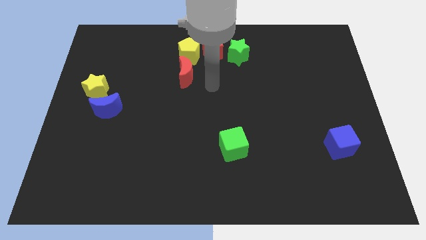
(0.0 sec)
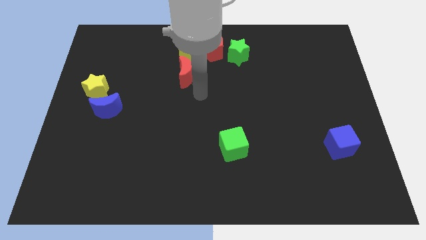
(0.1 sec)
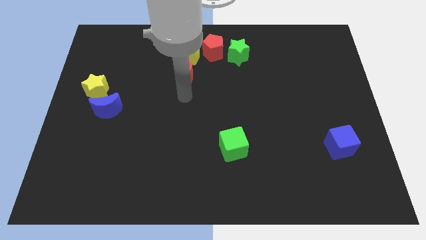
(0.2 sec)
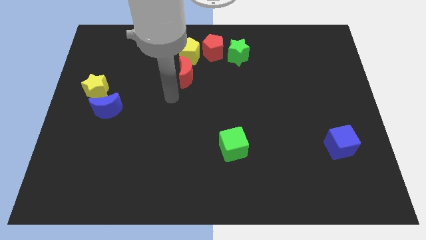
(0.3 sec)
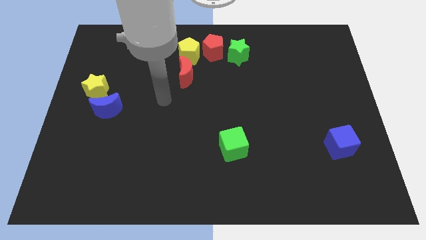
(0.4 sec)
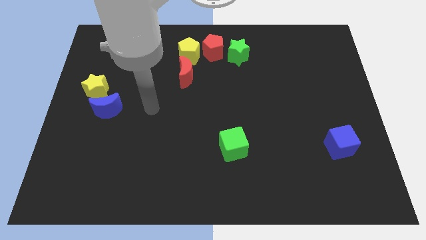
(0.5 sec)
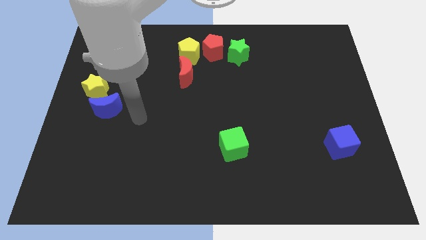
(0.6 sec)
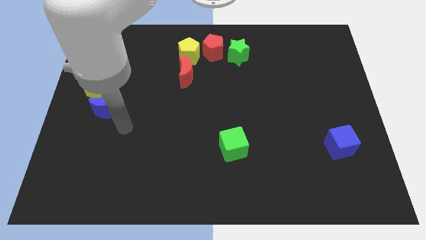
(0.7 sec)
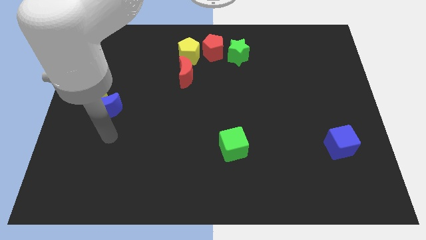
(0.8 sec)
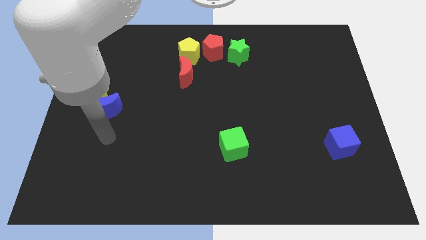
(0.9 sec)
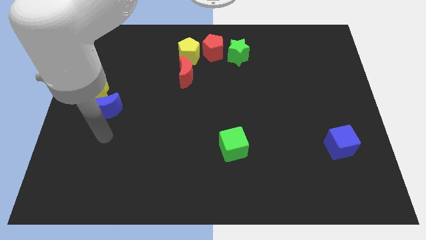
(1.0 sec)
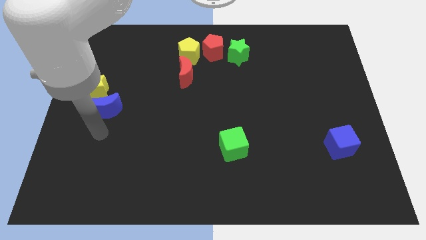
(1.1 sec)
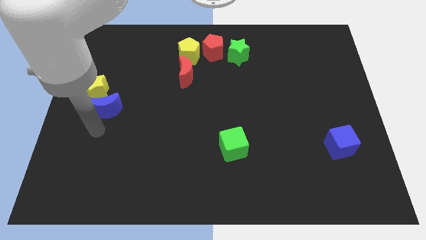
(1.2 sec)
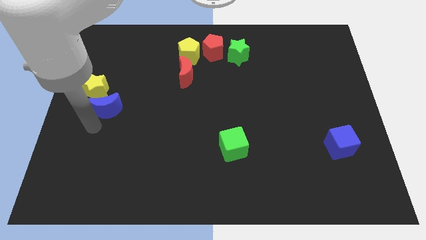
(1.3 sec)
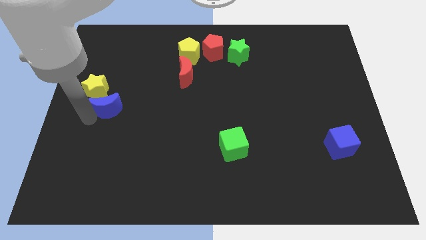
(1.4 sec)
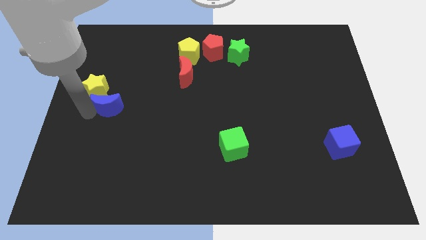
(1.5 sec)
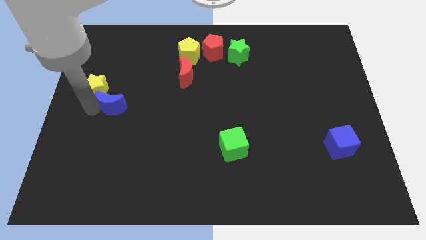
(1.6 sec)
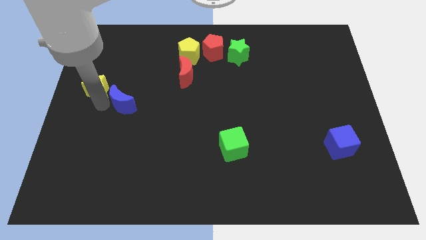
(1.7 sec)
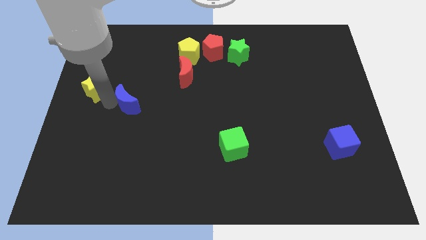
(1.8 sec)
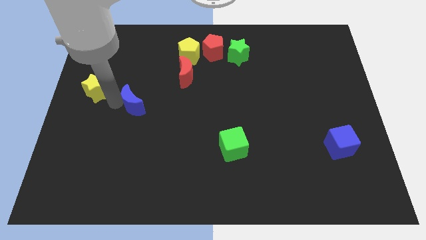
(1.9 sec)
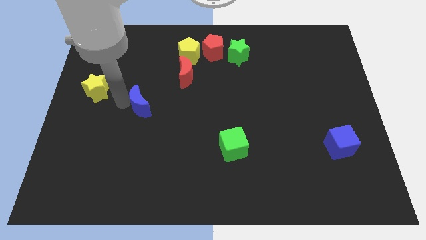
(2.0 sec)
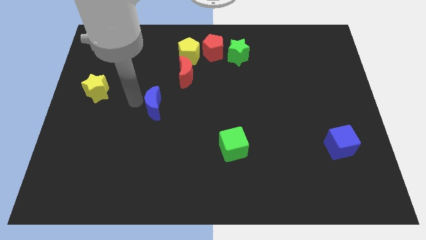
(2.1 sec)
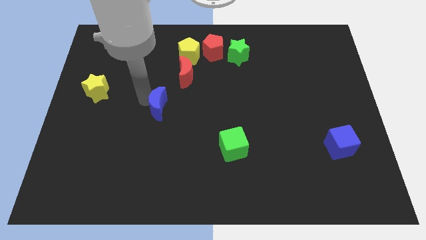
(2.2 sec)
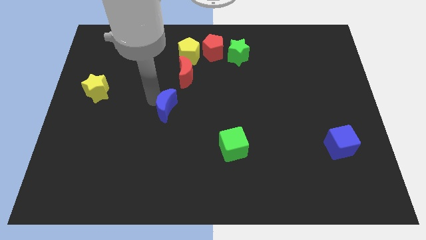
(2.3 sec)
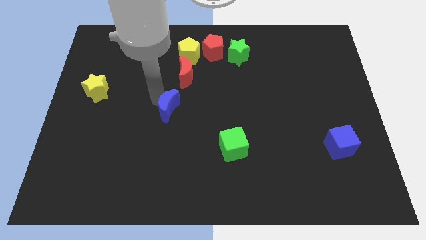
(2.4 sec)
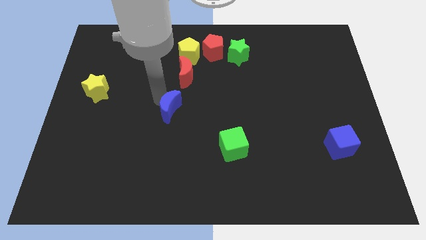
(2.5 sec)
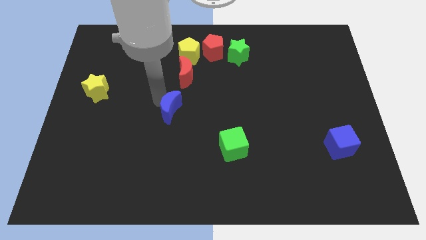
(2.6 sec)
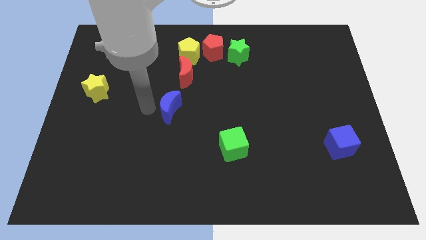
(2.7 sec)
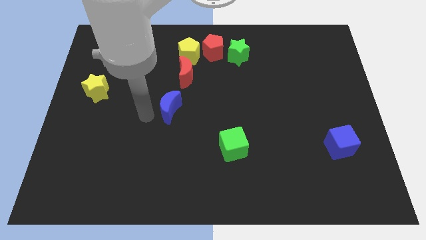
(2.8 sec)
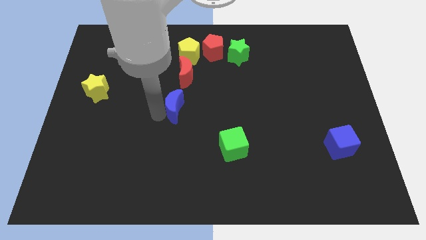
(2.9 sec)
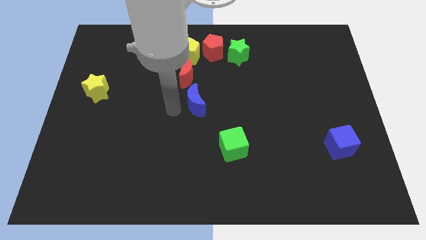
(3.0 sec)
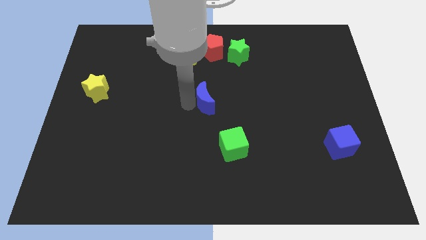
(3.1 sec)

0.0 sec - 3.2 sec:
slide the blue moon to the bottom right of the red moon

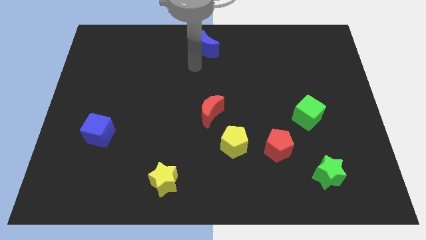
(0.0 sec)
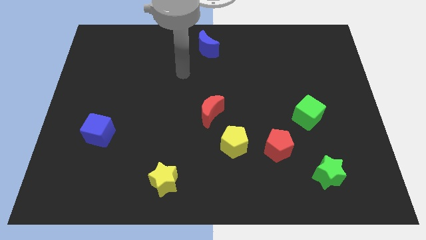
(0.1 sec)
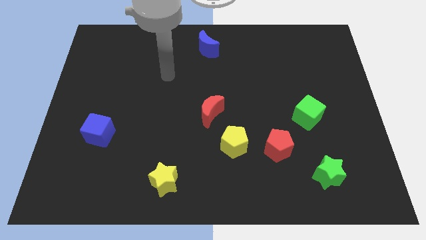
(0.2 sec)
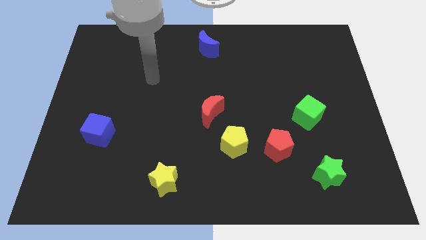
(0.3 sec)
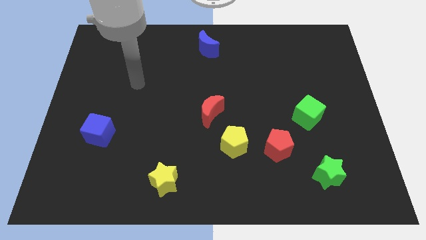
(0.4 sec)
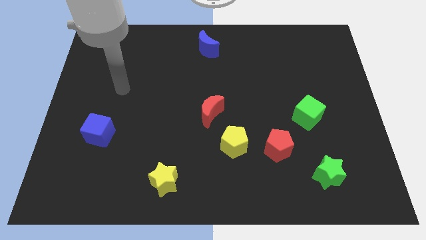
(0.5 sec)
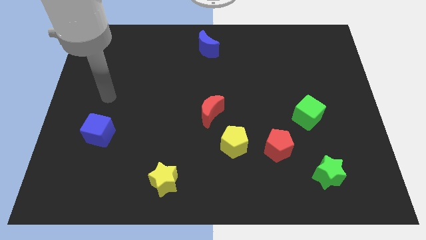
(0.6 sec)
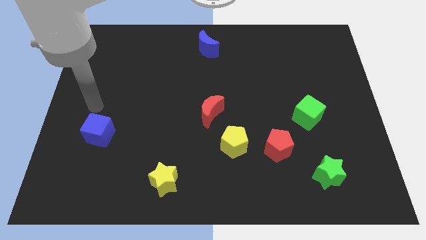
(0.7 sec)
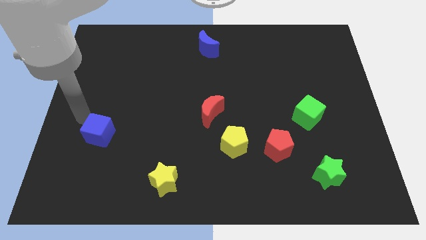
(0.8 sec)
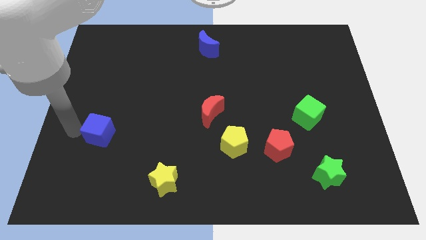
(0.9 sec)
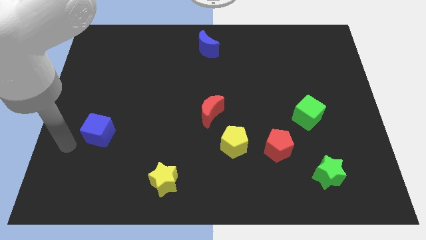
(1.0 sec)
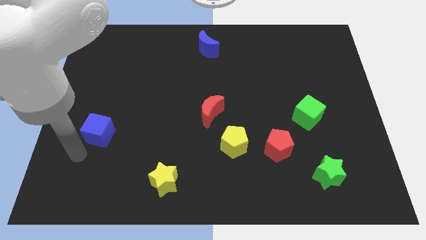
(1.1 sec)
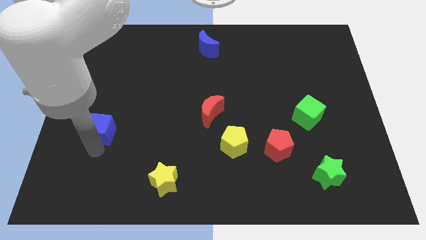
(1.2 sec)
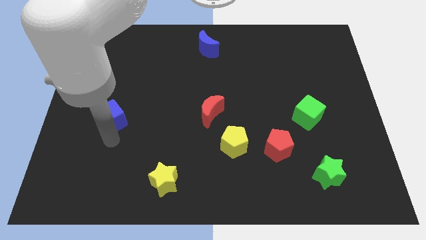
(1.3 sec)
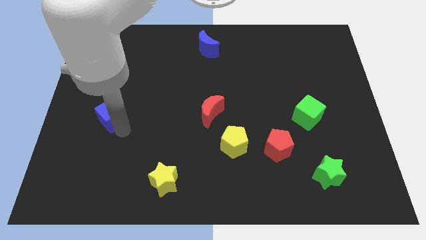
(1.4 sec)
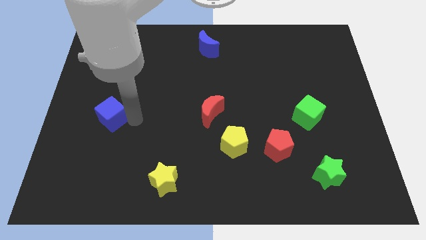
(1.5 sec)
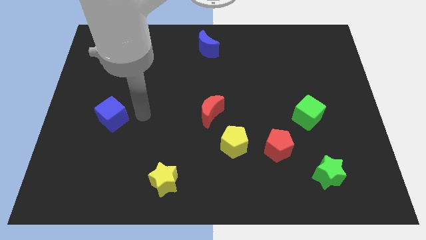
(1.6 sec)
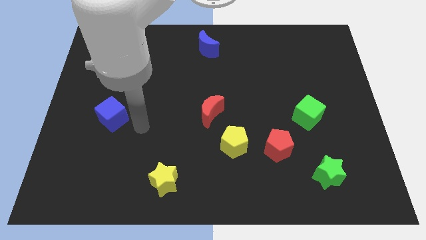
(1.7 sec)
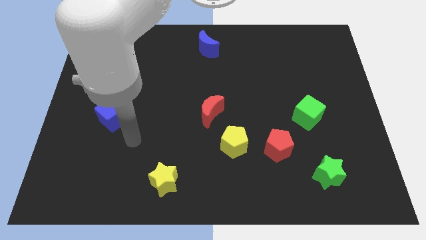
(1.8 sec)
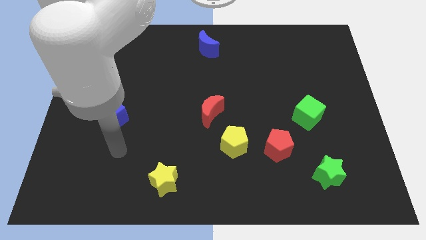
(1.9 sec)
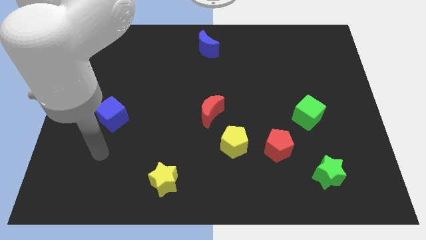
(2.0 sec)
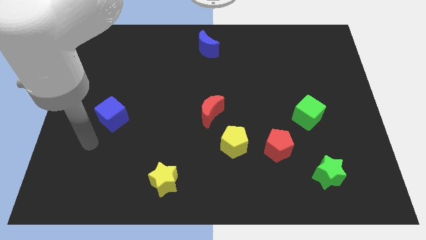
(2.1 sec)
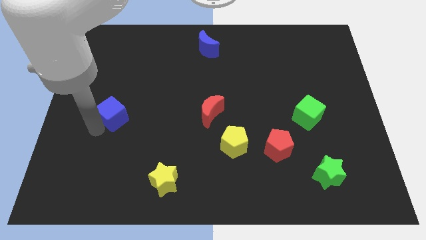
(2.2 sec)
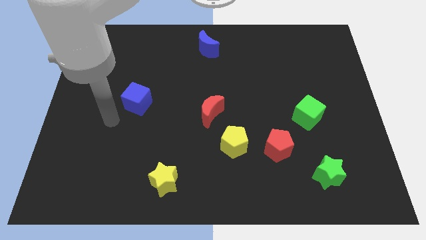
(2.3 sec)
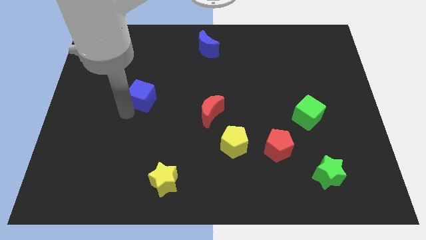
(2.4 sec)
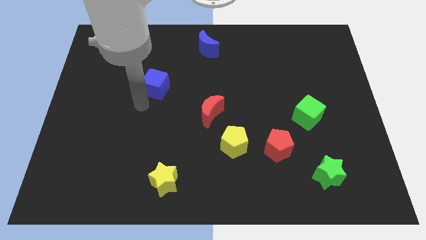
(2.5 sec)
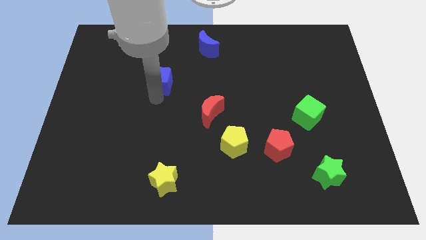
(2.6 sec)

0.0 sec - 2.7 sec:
push the blue cube up slightly

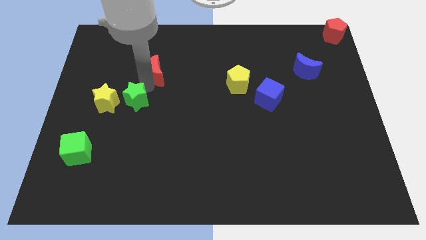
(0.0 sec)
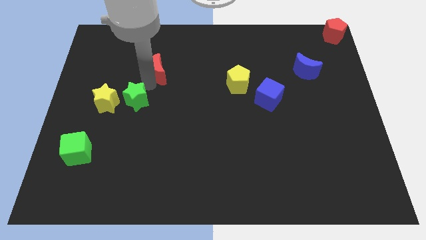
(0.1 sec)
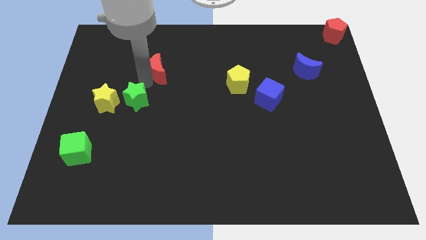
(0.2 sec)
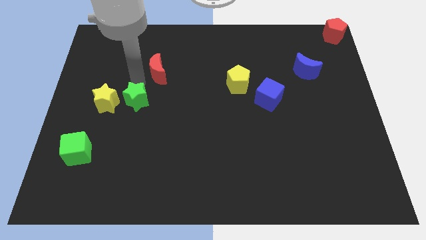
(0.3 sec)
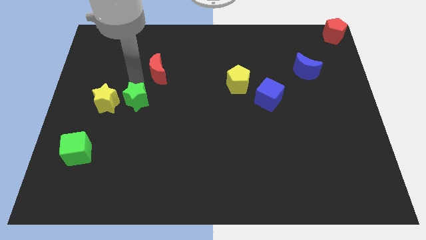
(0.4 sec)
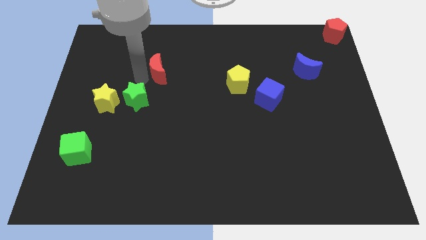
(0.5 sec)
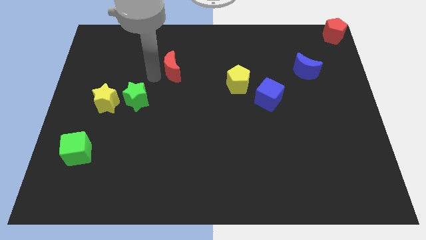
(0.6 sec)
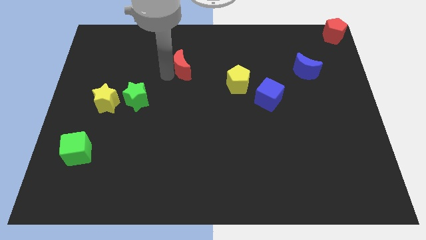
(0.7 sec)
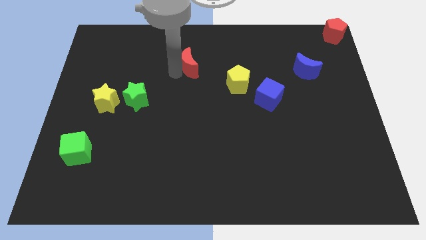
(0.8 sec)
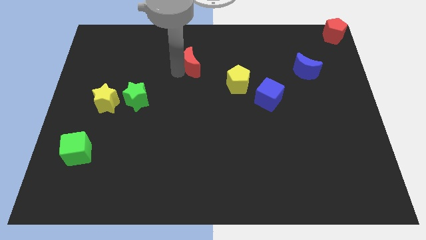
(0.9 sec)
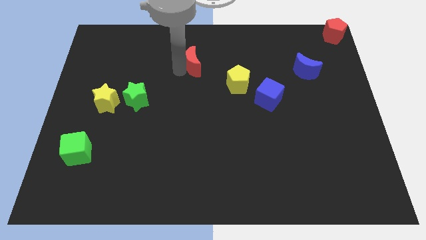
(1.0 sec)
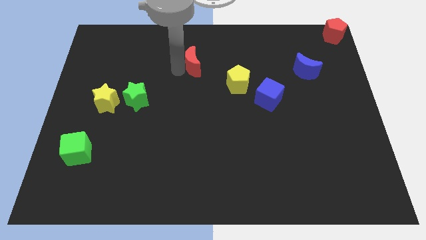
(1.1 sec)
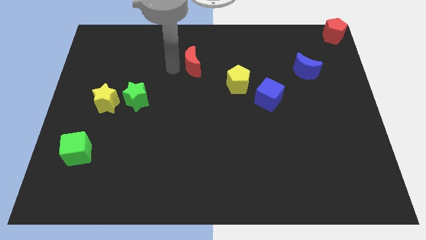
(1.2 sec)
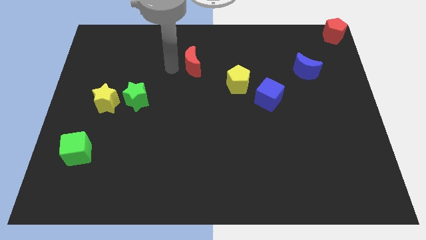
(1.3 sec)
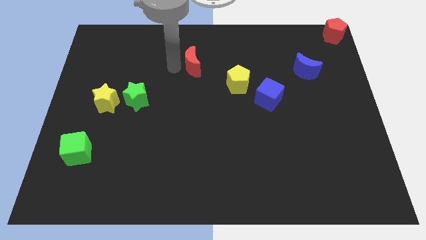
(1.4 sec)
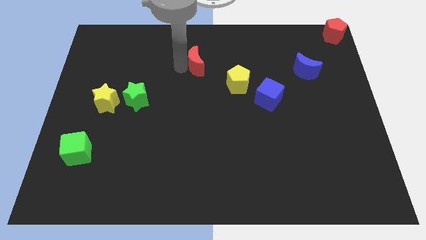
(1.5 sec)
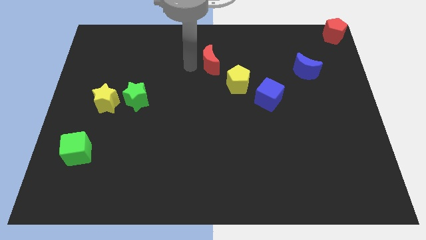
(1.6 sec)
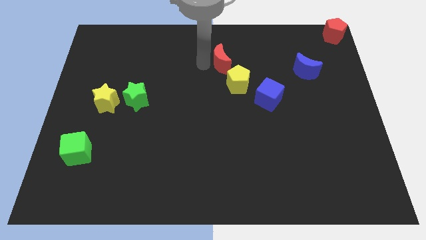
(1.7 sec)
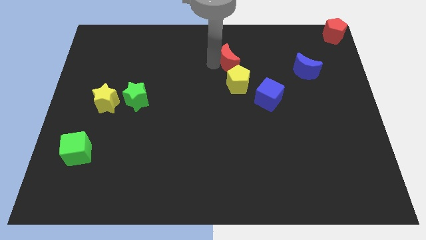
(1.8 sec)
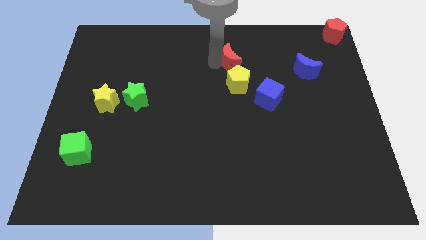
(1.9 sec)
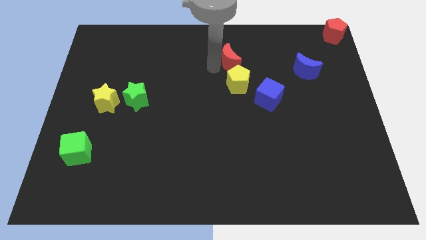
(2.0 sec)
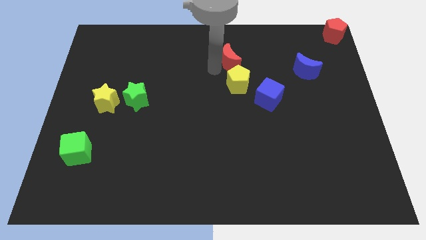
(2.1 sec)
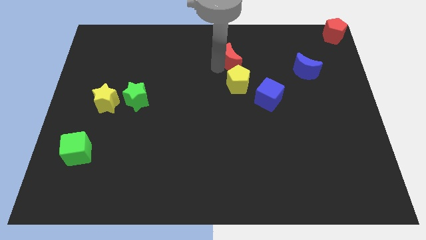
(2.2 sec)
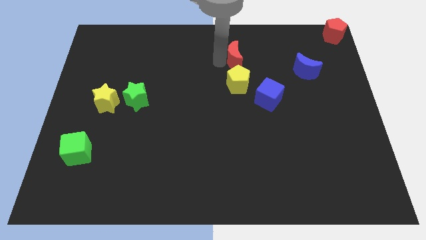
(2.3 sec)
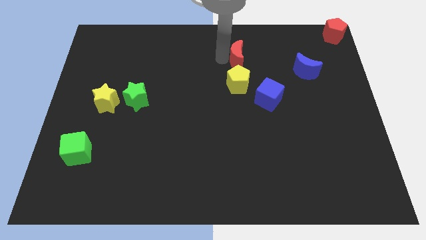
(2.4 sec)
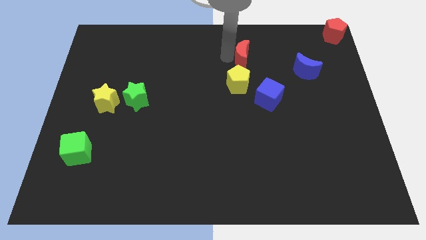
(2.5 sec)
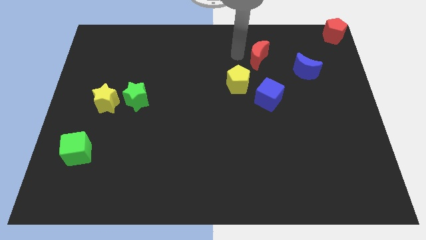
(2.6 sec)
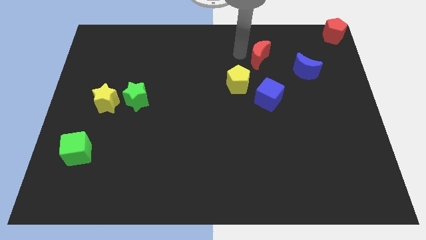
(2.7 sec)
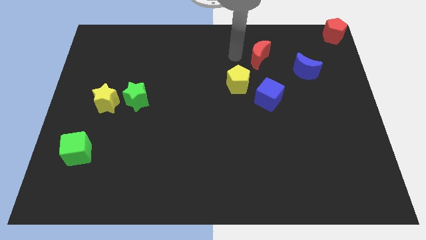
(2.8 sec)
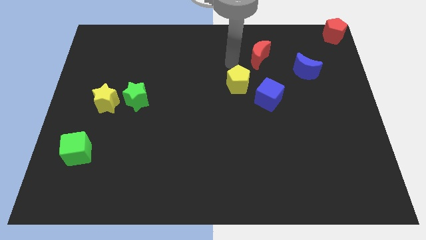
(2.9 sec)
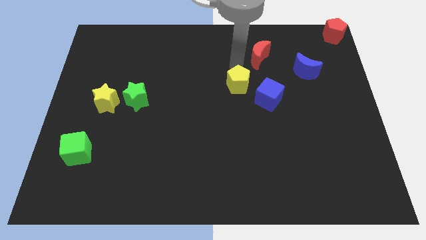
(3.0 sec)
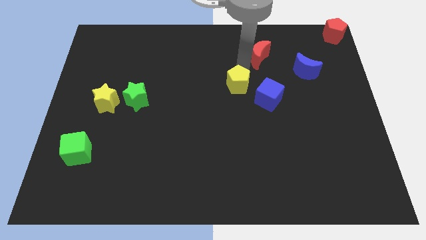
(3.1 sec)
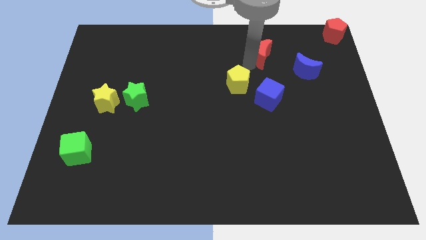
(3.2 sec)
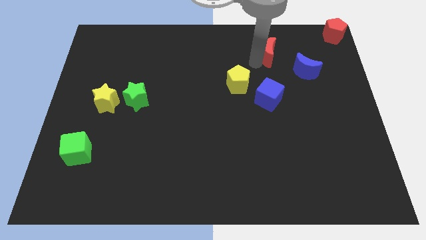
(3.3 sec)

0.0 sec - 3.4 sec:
move red moon vertically above blue cube
